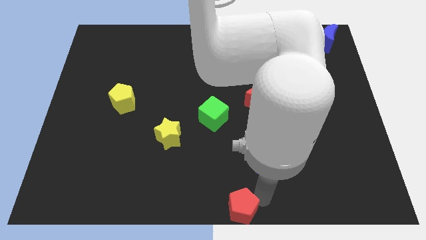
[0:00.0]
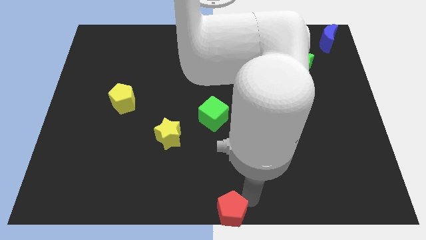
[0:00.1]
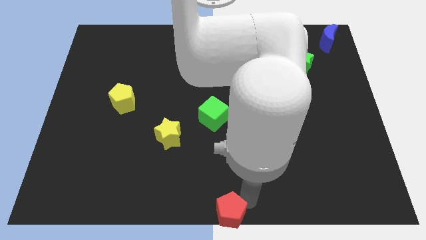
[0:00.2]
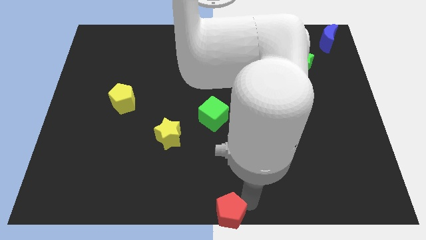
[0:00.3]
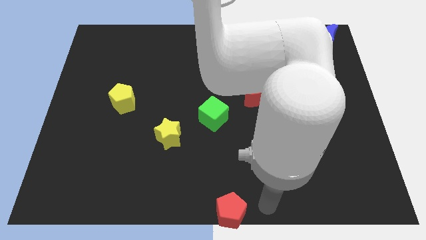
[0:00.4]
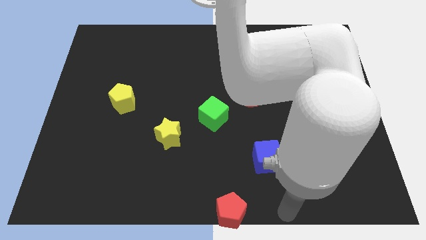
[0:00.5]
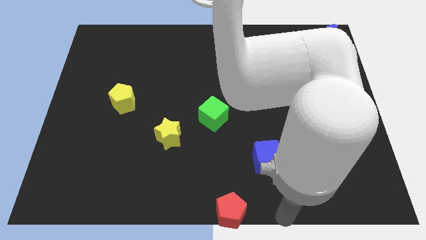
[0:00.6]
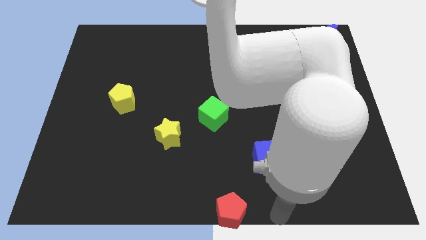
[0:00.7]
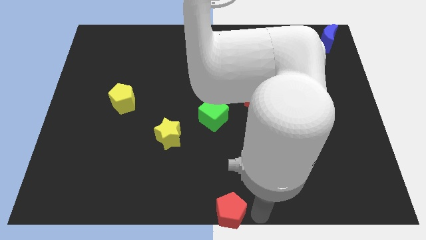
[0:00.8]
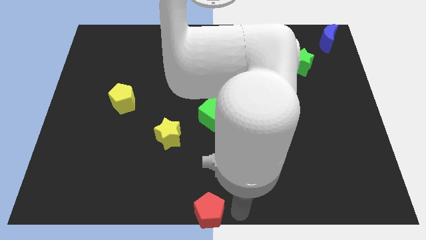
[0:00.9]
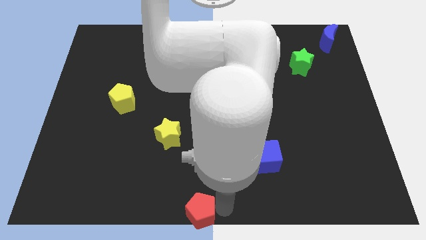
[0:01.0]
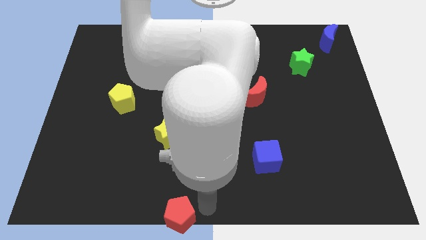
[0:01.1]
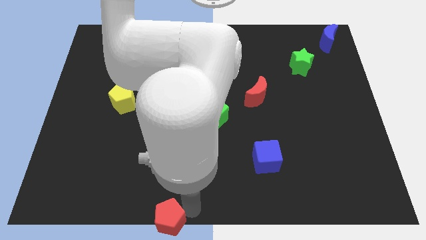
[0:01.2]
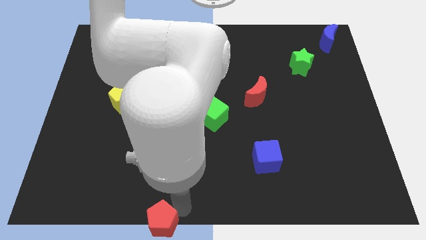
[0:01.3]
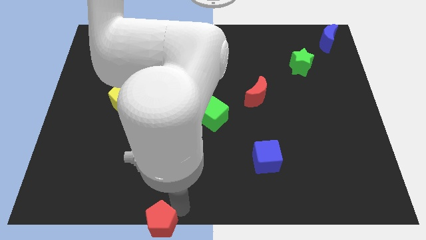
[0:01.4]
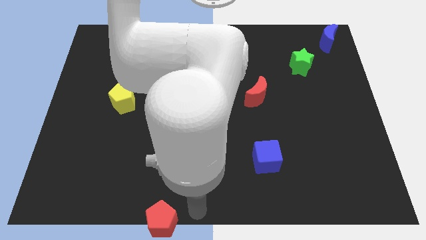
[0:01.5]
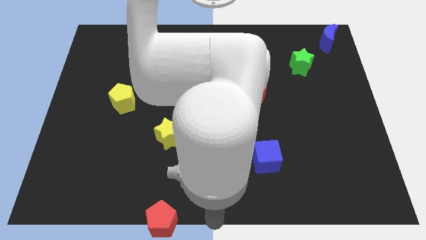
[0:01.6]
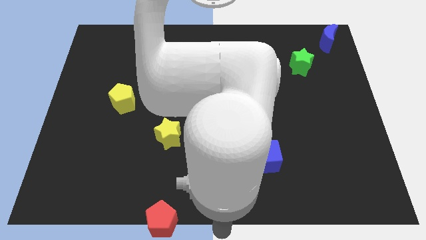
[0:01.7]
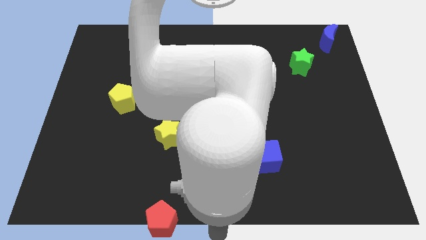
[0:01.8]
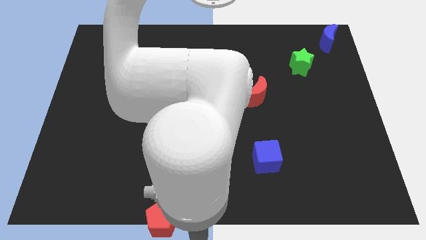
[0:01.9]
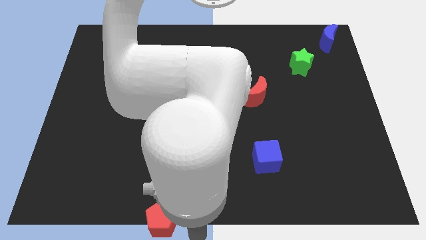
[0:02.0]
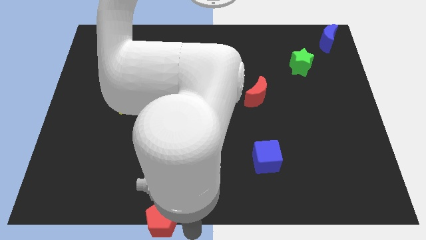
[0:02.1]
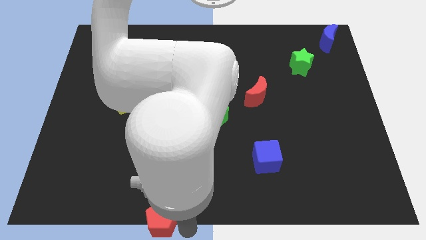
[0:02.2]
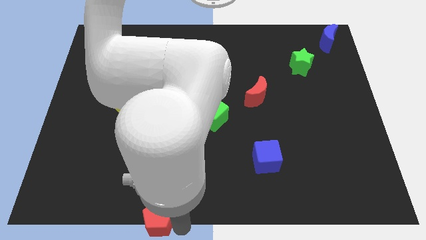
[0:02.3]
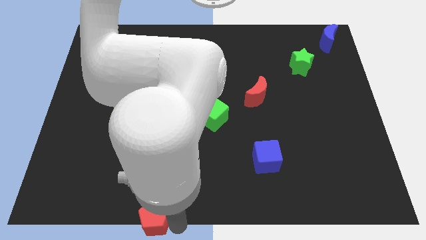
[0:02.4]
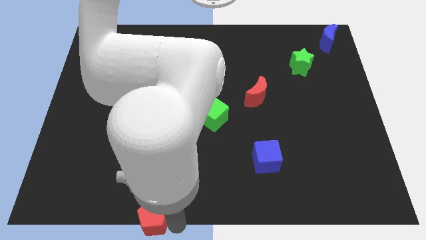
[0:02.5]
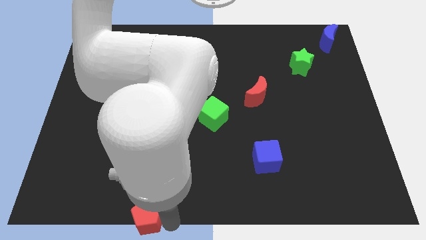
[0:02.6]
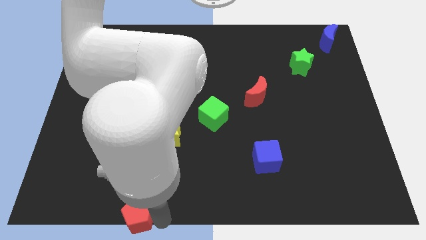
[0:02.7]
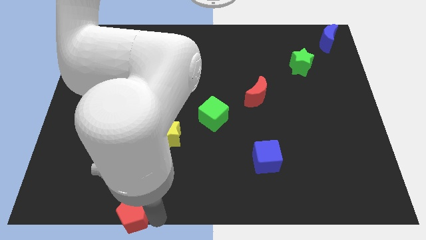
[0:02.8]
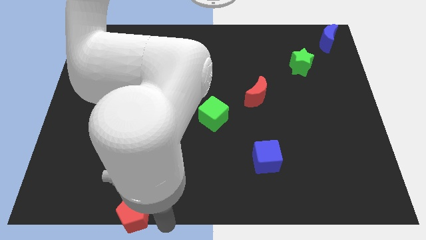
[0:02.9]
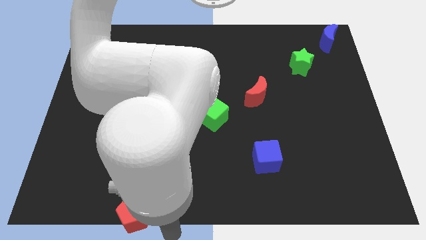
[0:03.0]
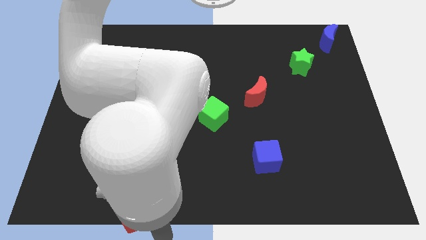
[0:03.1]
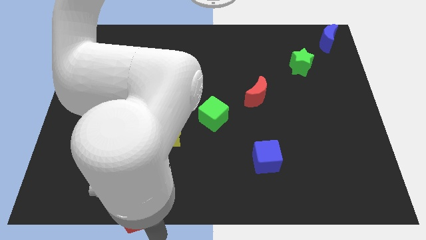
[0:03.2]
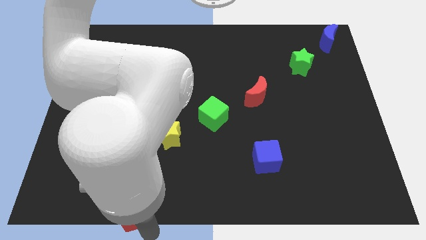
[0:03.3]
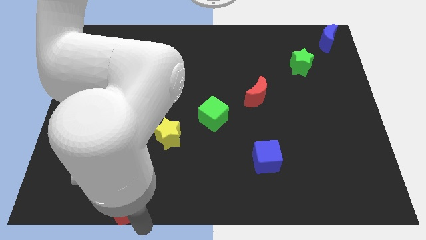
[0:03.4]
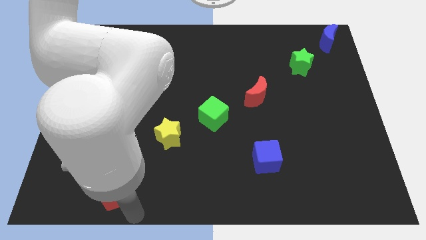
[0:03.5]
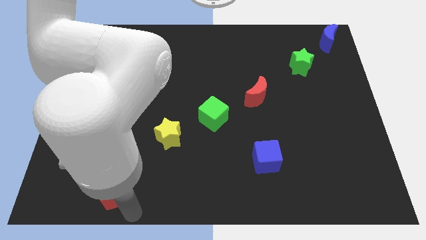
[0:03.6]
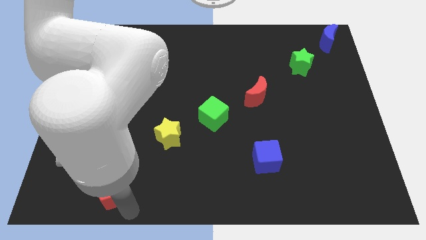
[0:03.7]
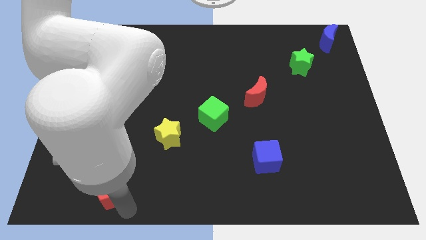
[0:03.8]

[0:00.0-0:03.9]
place the red pentagon diagonally bottom left to the yellow star

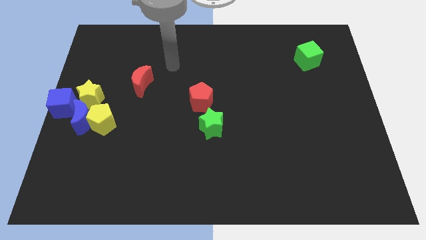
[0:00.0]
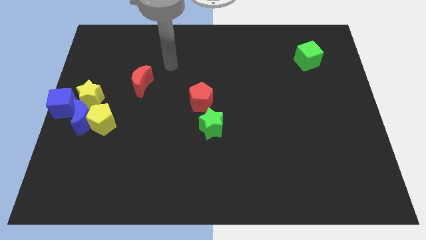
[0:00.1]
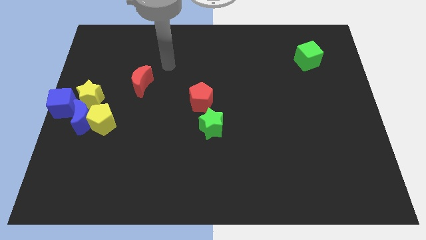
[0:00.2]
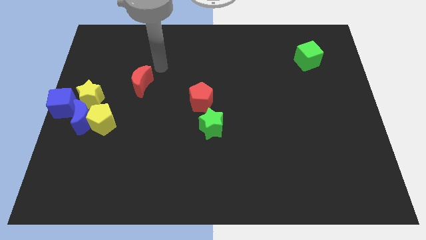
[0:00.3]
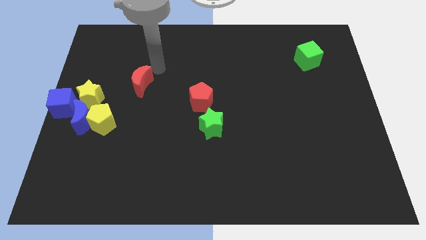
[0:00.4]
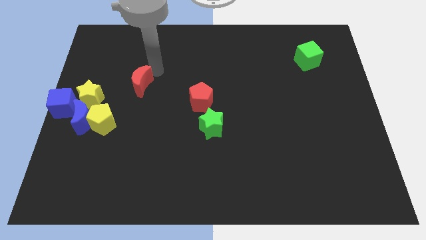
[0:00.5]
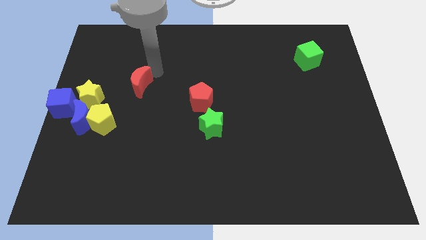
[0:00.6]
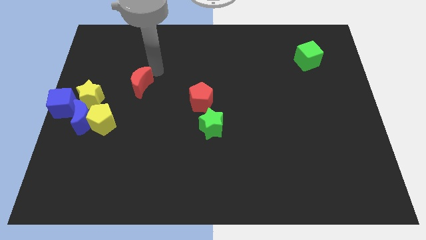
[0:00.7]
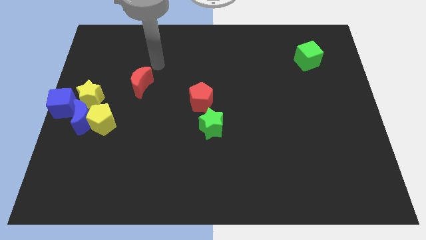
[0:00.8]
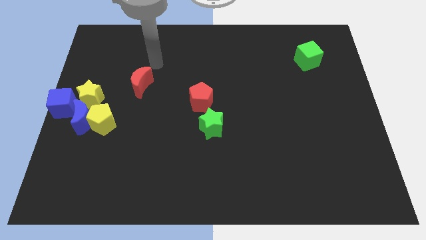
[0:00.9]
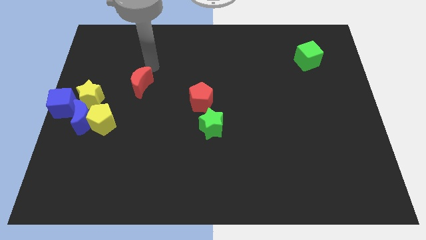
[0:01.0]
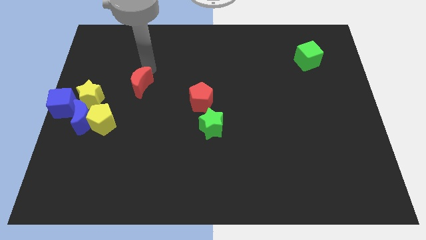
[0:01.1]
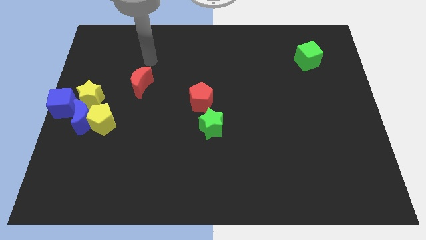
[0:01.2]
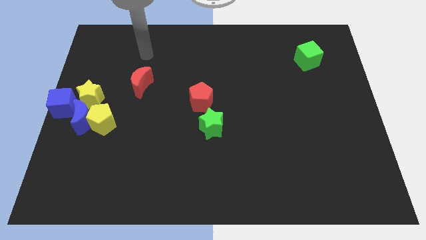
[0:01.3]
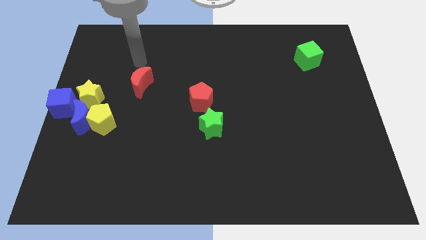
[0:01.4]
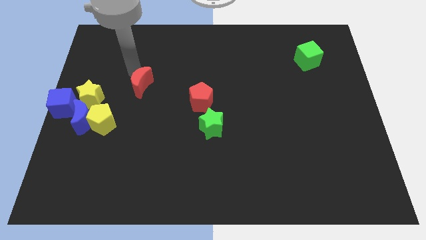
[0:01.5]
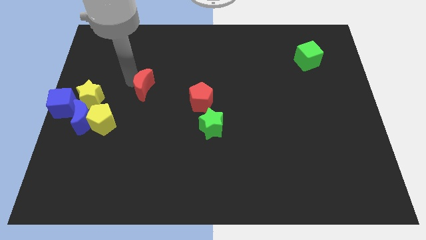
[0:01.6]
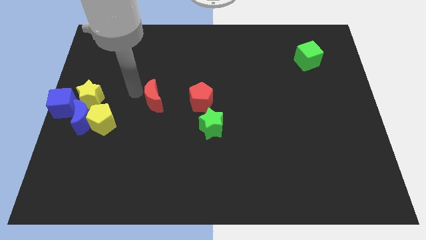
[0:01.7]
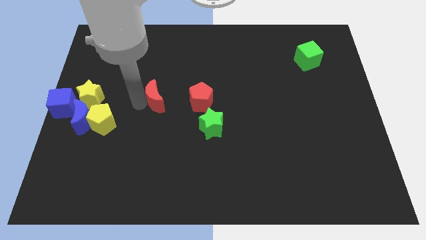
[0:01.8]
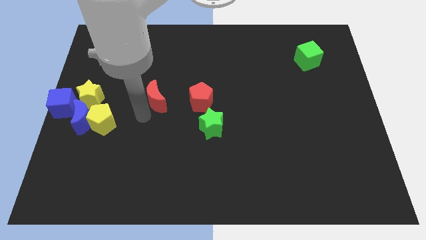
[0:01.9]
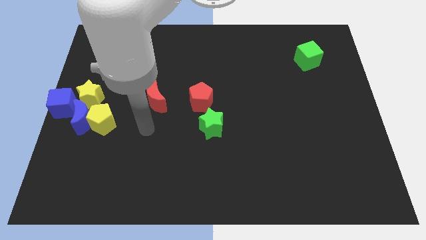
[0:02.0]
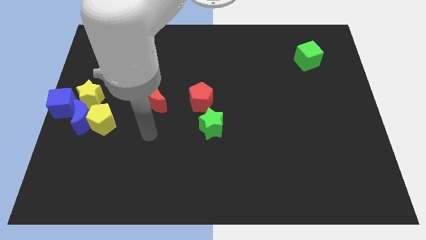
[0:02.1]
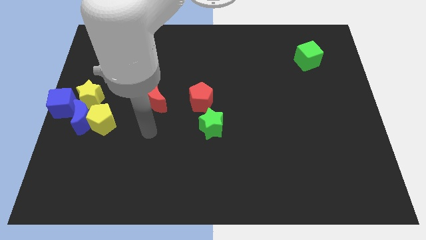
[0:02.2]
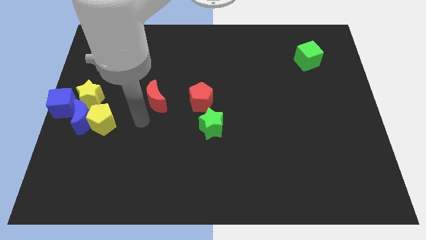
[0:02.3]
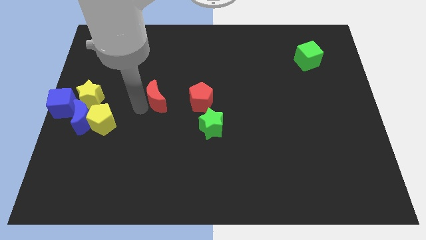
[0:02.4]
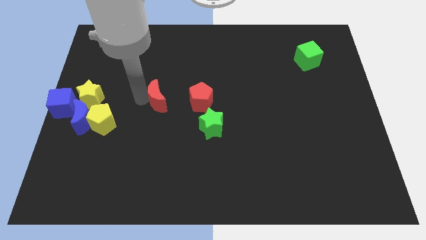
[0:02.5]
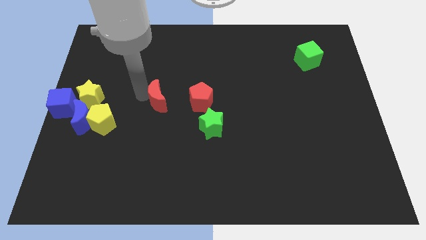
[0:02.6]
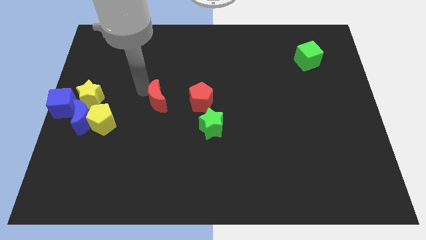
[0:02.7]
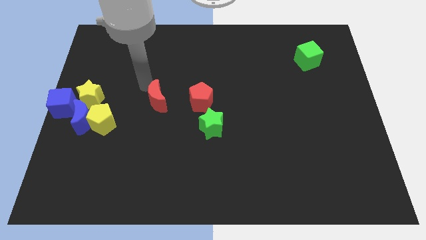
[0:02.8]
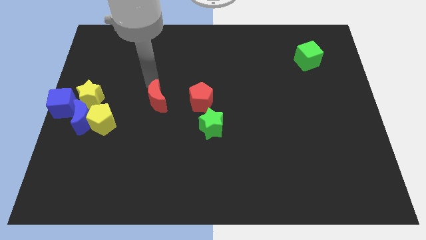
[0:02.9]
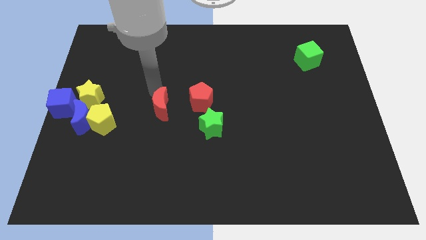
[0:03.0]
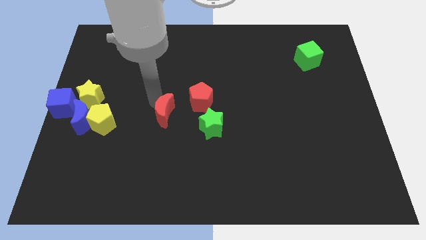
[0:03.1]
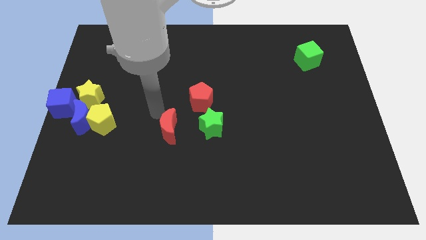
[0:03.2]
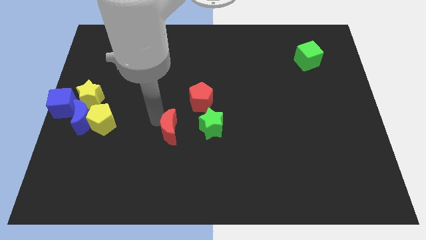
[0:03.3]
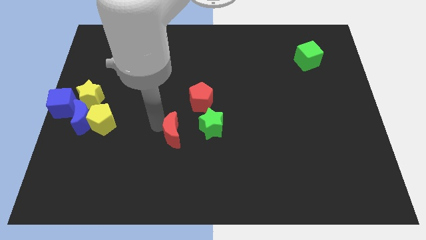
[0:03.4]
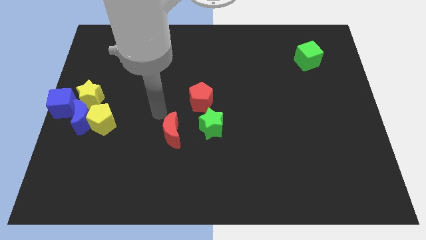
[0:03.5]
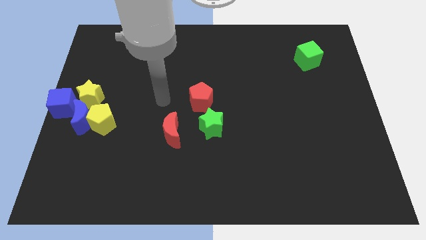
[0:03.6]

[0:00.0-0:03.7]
put the red crescent to the left of the green star

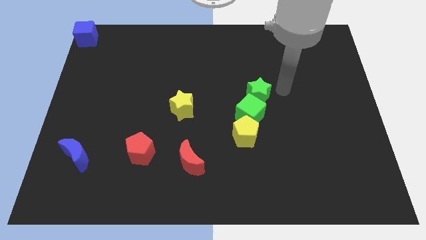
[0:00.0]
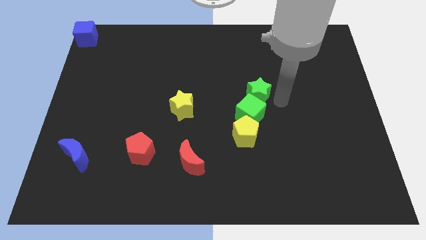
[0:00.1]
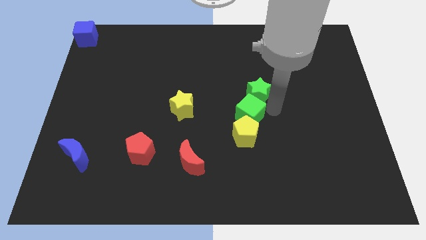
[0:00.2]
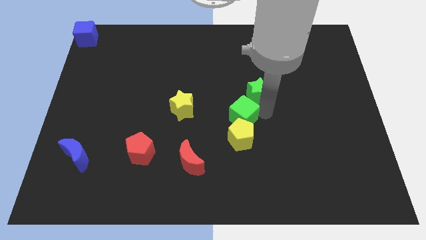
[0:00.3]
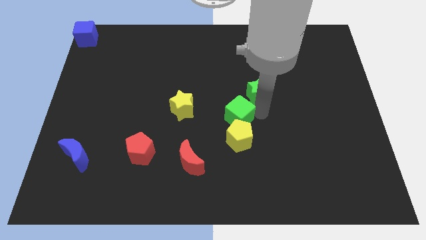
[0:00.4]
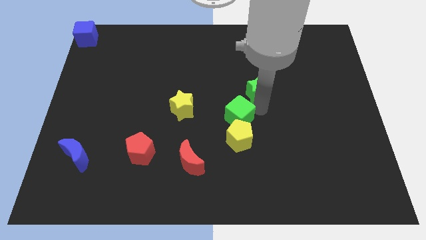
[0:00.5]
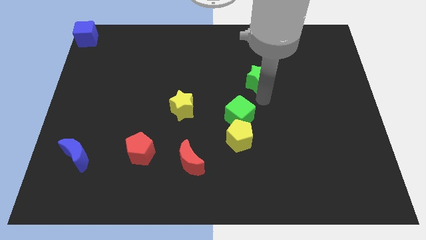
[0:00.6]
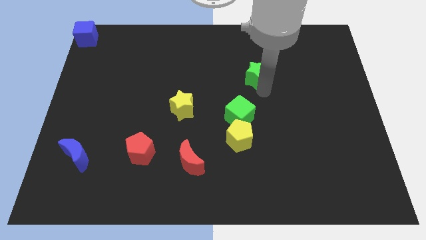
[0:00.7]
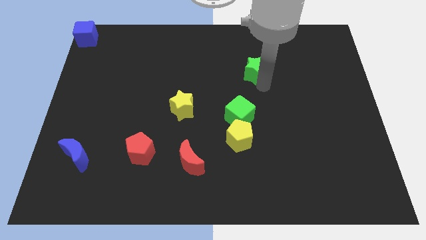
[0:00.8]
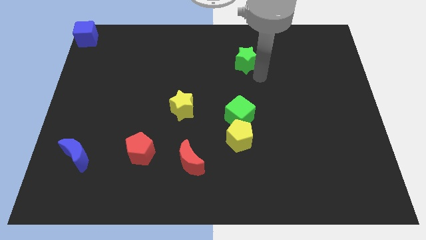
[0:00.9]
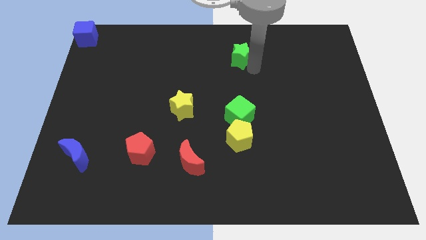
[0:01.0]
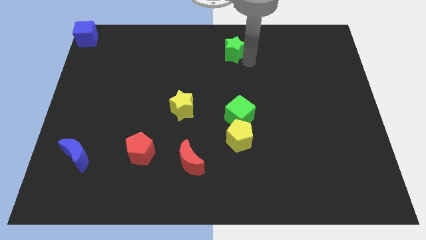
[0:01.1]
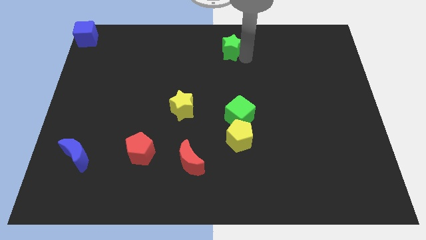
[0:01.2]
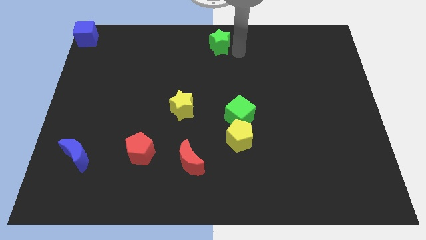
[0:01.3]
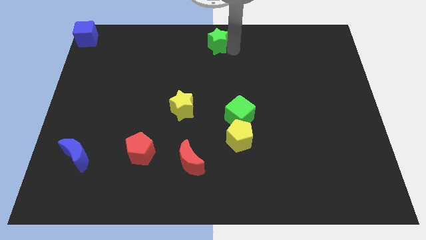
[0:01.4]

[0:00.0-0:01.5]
place the green star on top center of the board

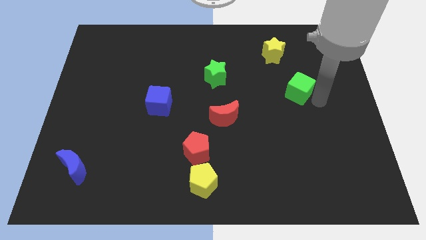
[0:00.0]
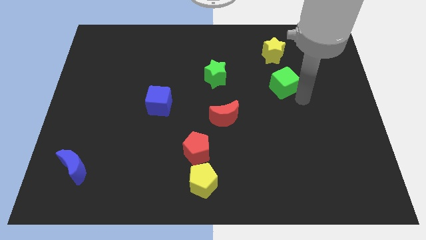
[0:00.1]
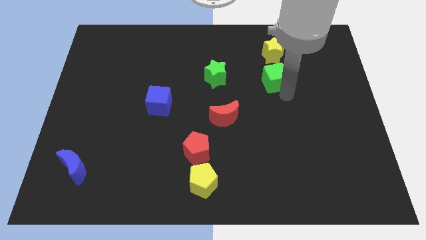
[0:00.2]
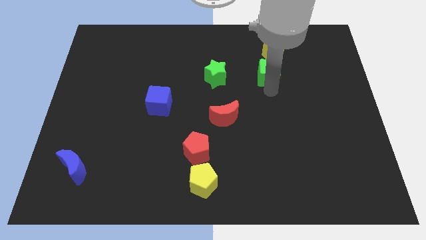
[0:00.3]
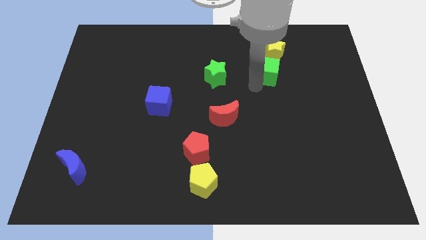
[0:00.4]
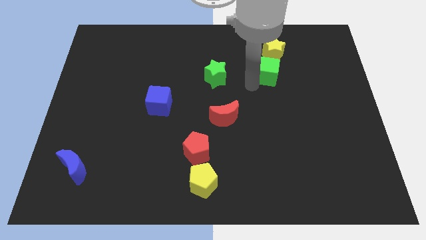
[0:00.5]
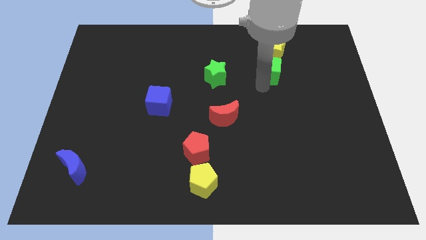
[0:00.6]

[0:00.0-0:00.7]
move the green cube below the yellow star
